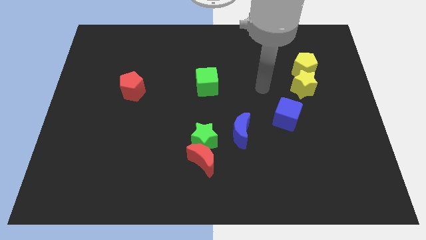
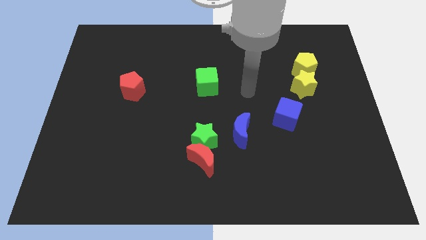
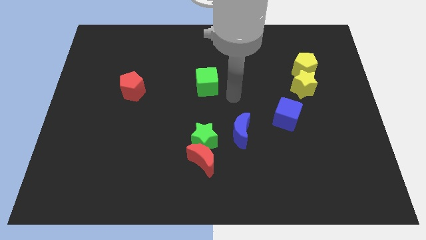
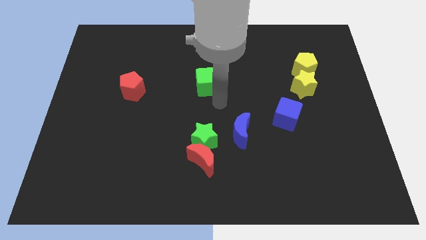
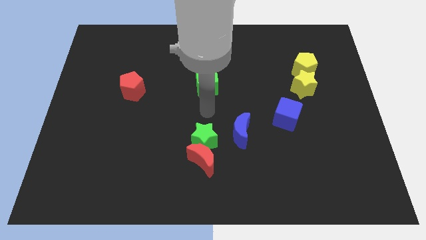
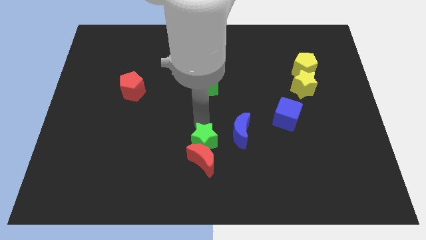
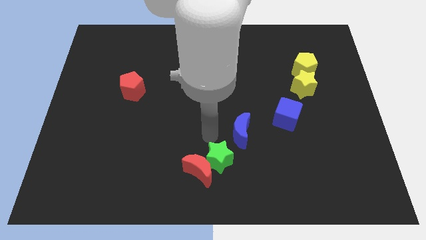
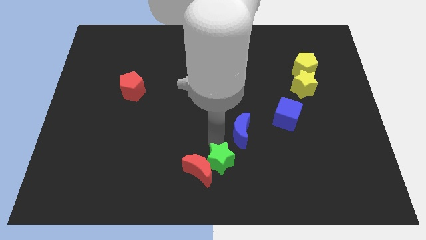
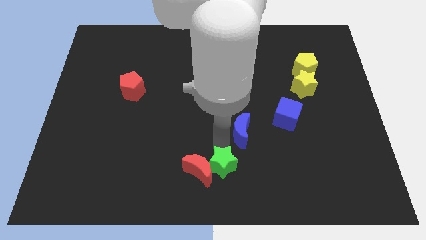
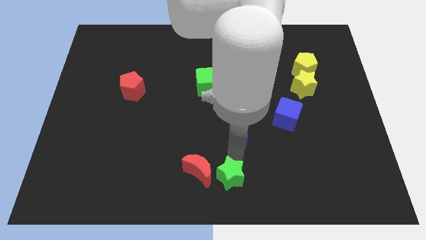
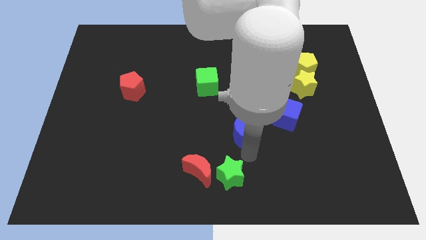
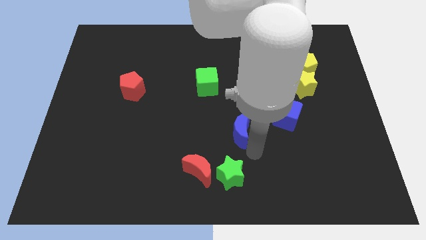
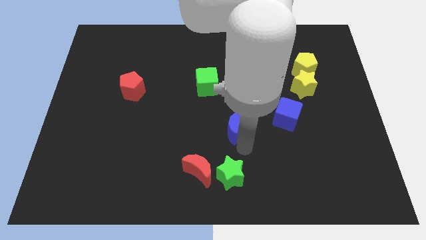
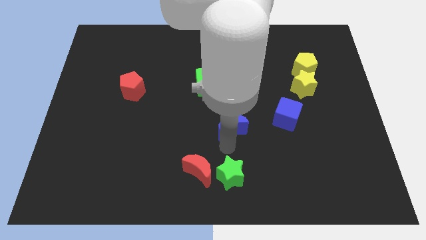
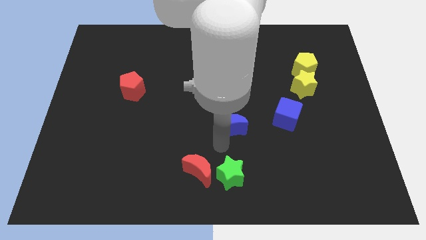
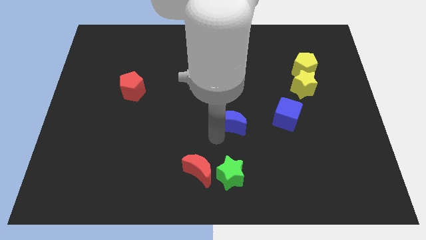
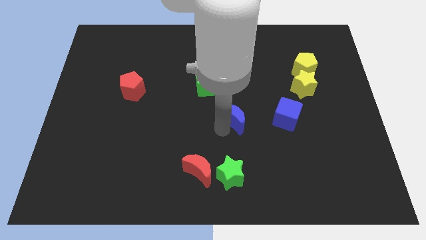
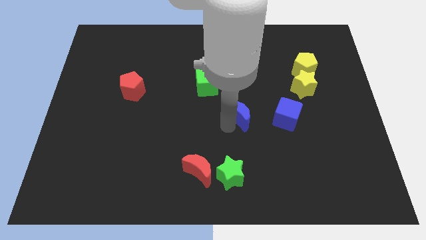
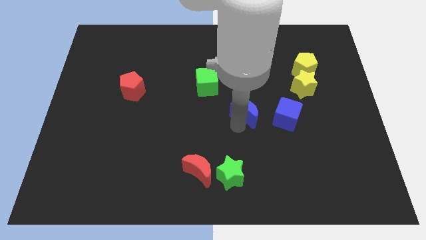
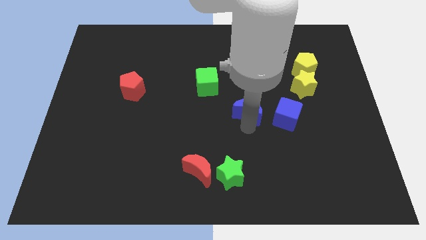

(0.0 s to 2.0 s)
move the blue crescent towards the left side of the blue cube

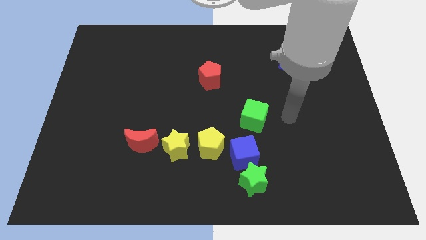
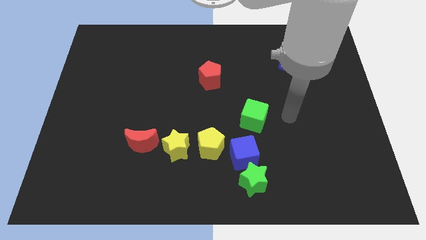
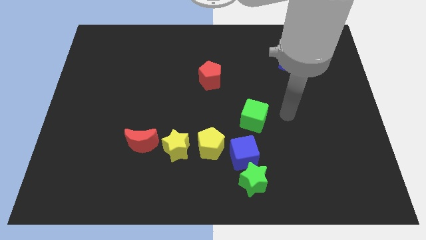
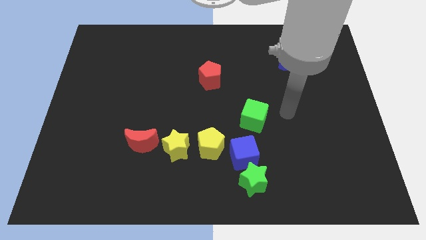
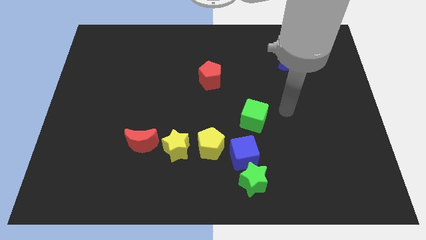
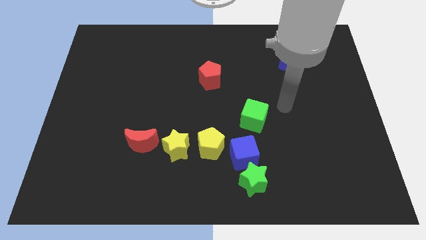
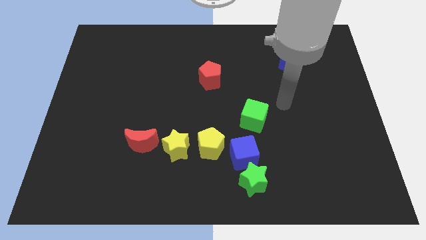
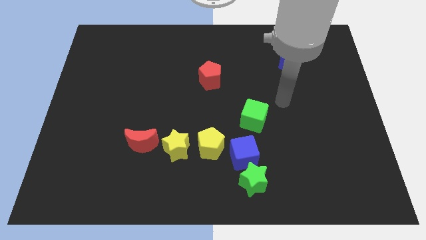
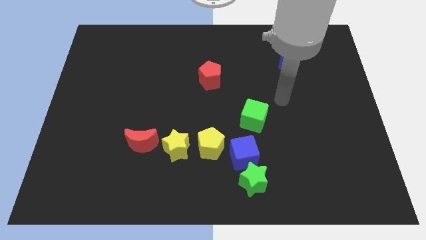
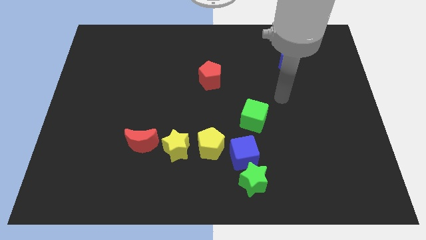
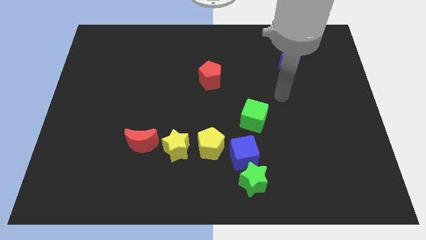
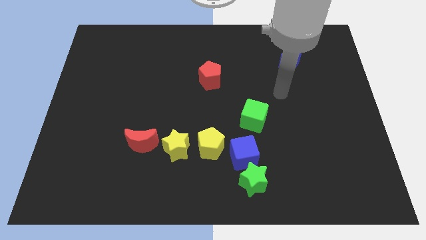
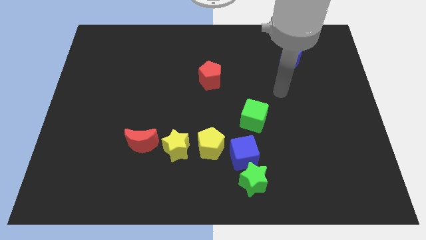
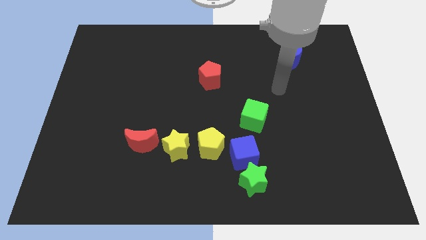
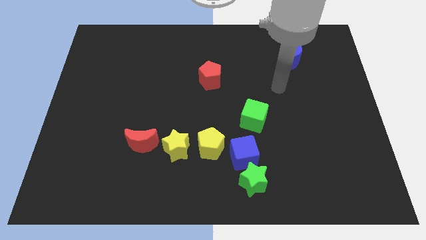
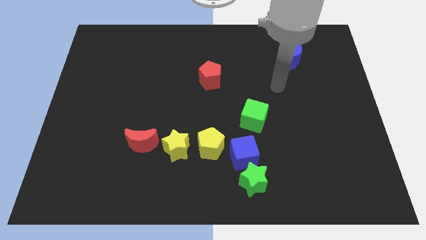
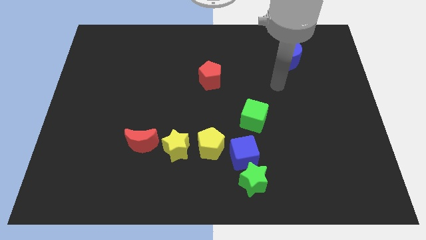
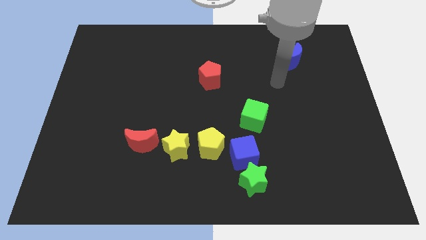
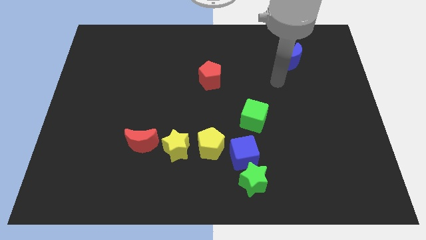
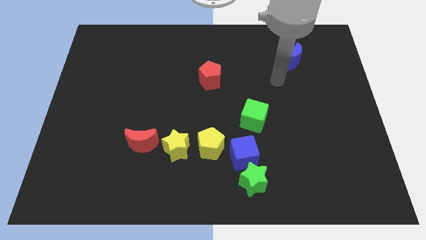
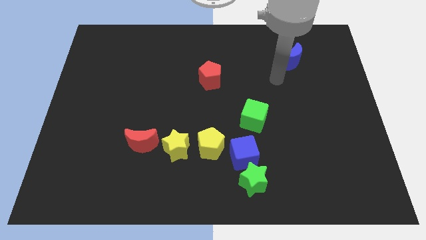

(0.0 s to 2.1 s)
place the arm at the bottom of the blue moon

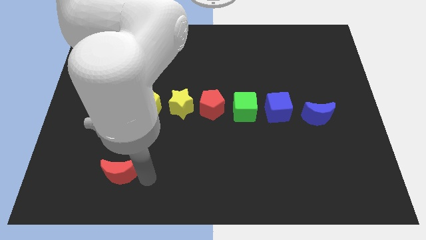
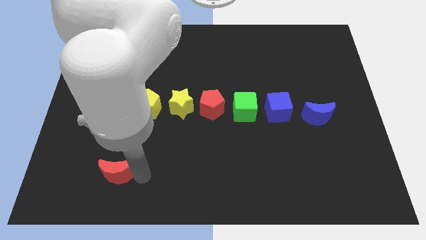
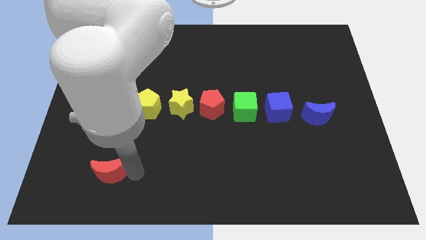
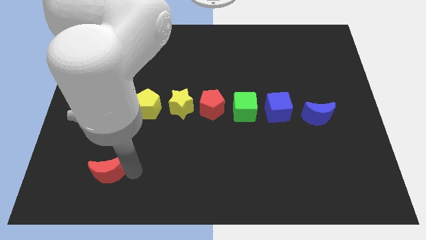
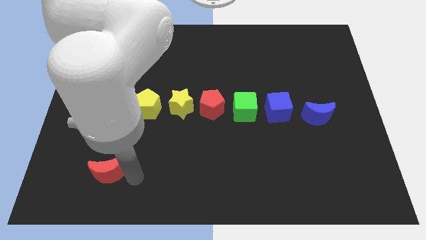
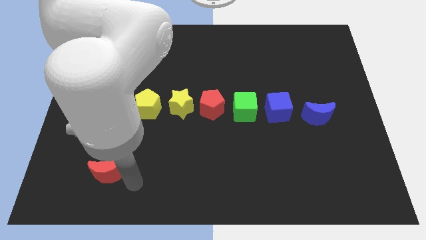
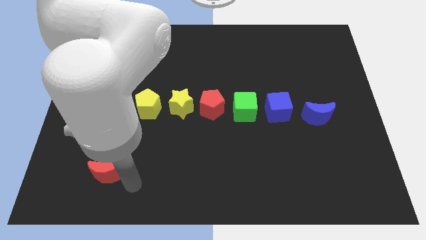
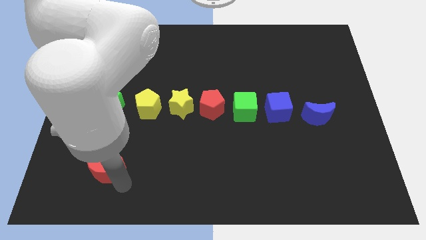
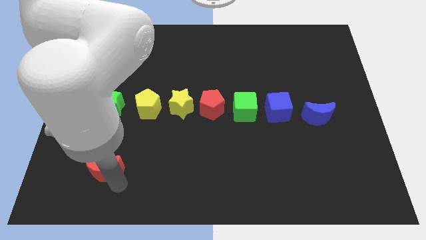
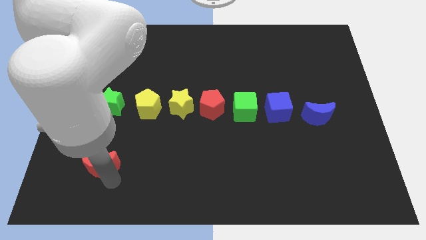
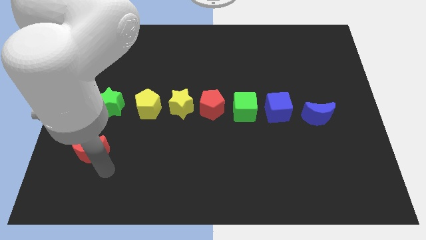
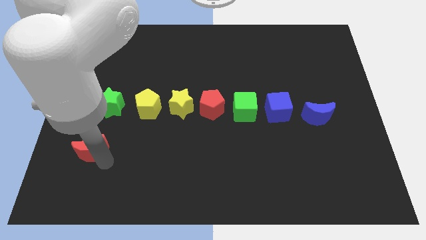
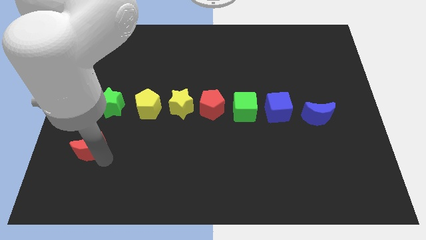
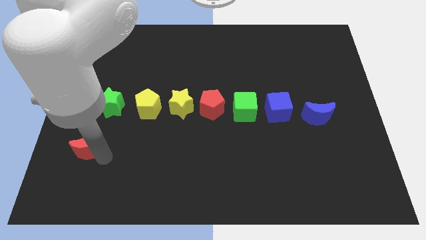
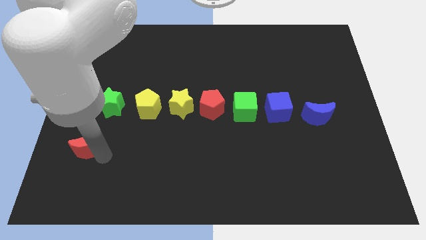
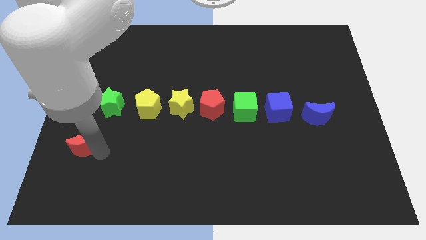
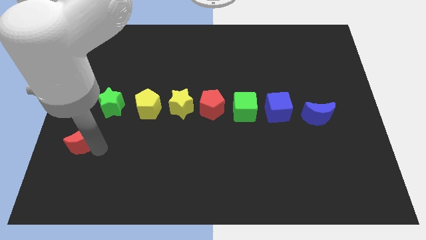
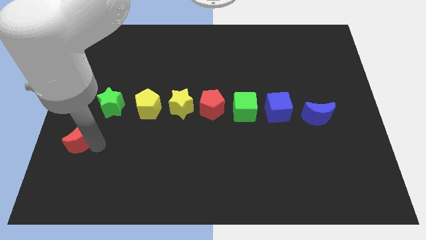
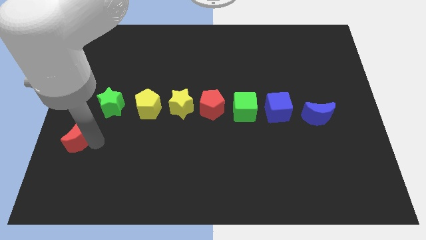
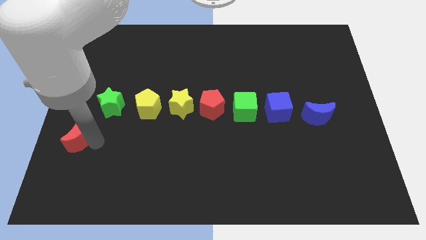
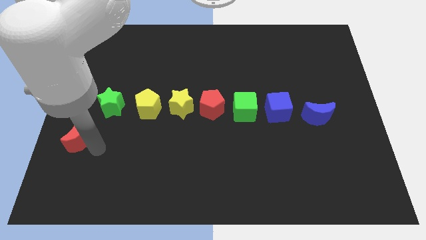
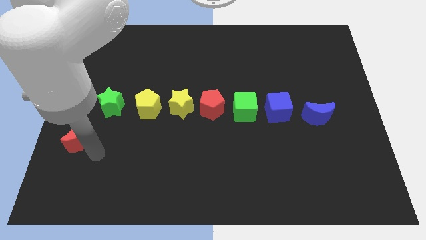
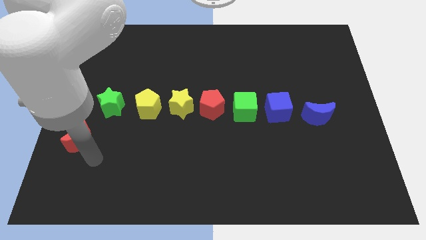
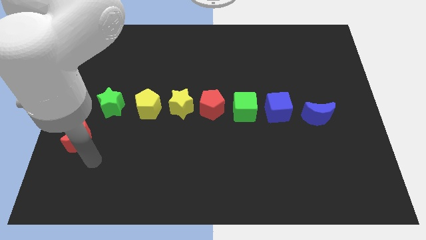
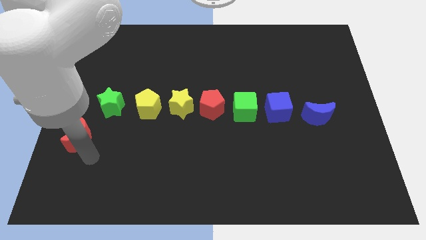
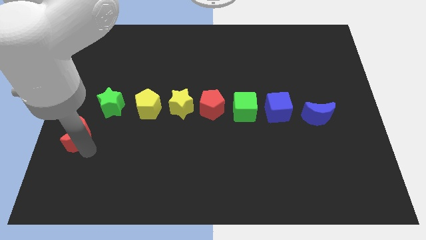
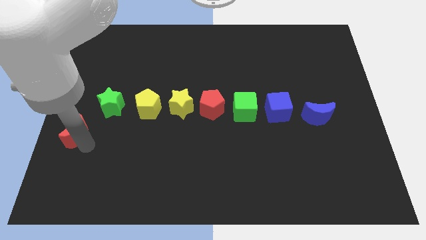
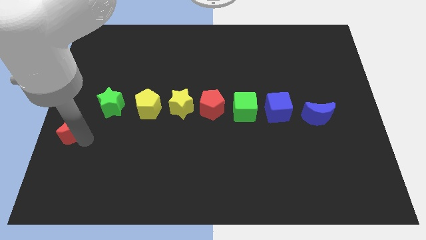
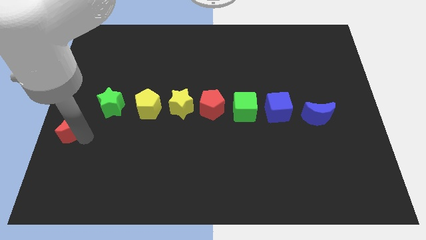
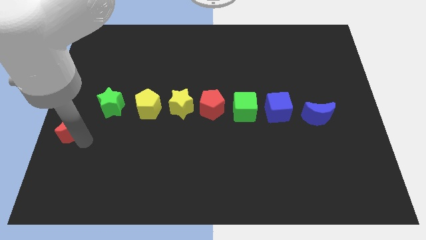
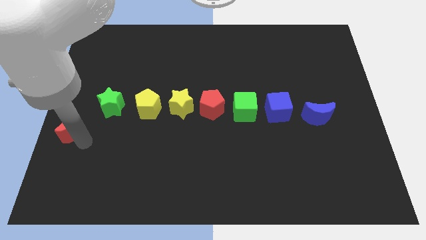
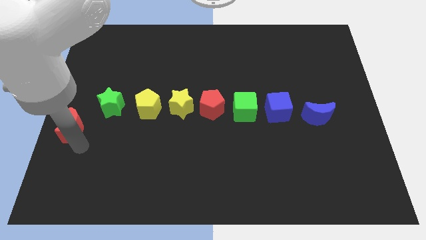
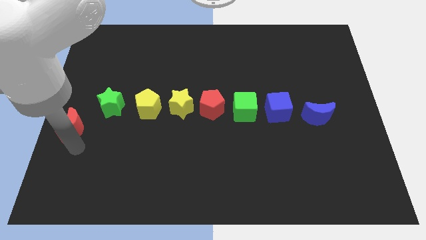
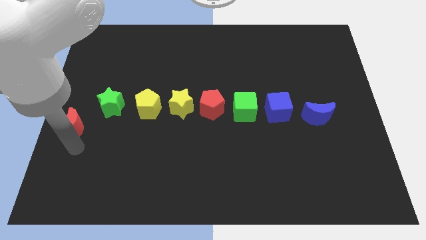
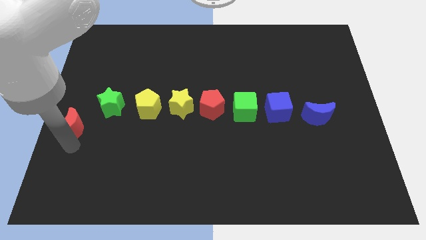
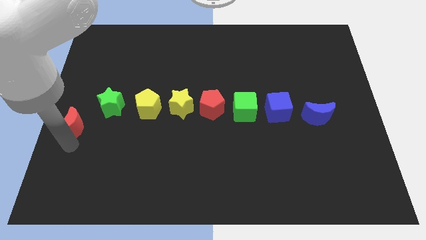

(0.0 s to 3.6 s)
move the red moon towards the top right side diagonally

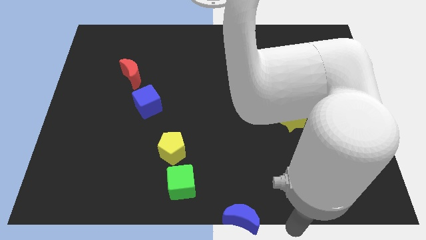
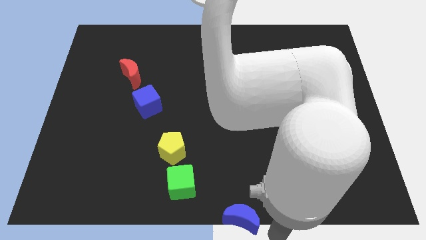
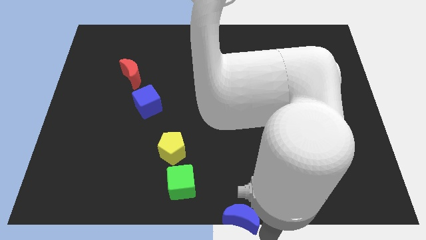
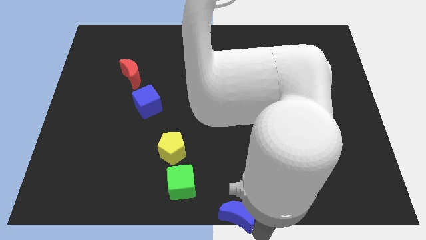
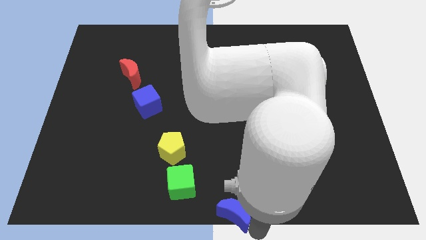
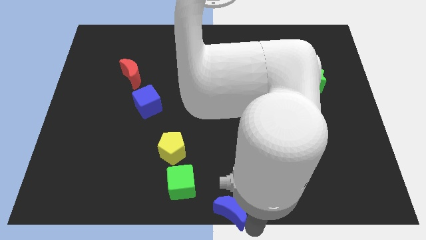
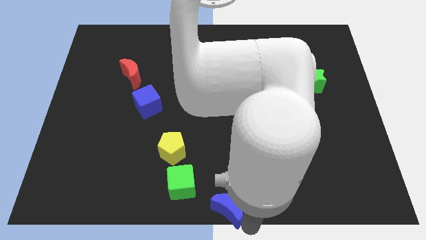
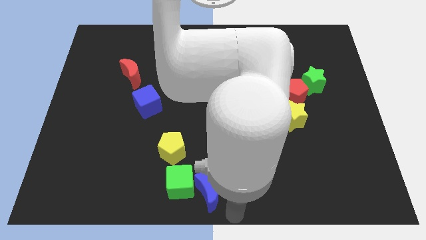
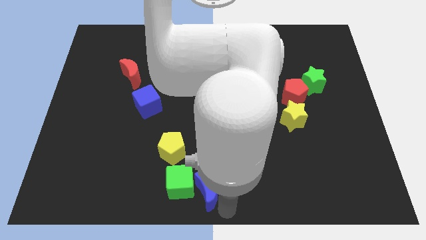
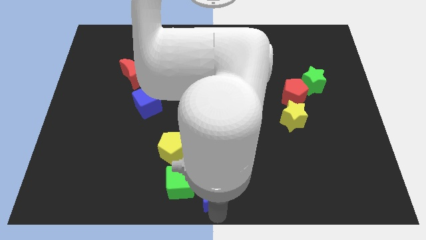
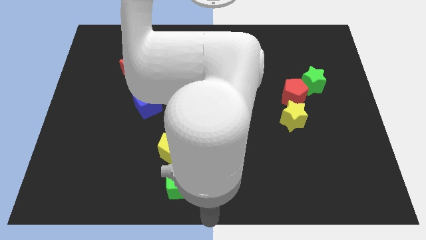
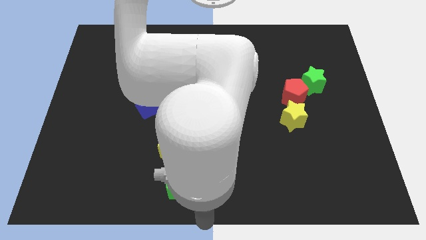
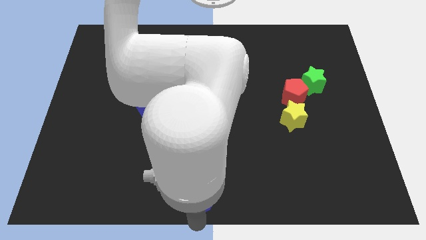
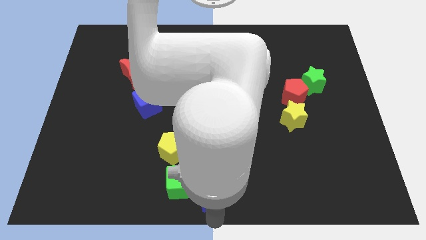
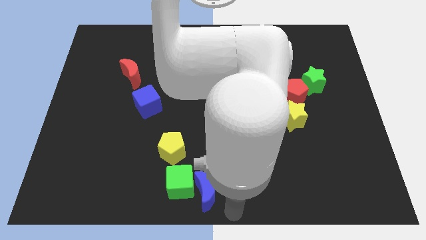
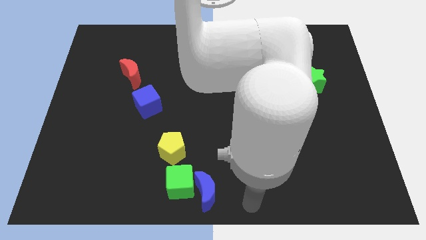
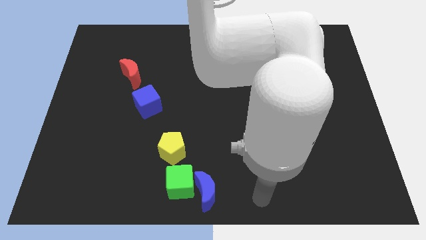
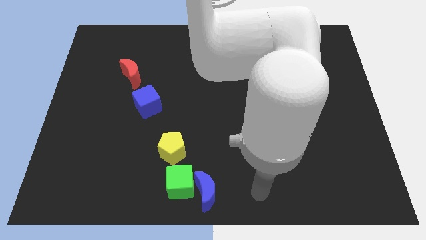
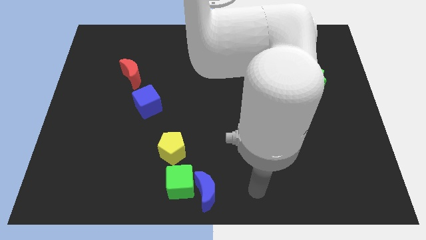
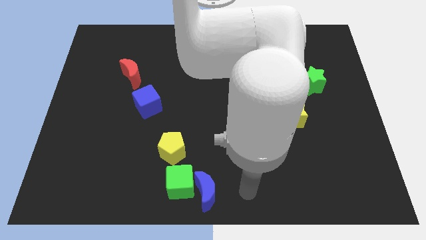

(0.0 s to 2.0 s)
place the blue moon to the right of green cube
